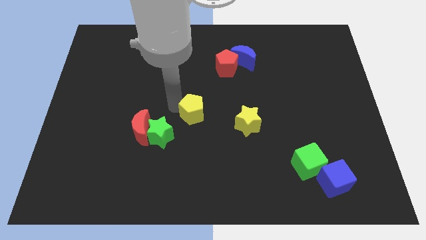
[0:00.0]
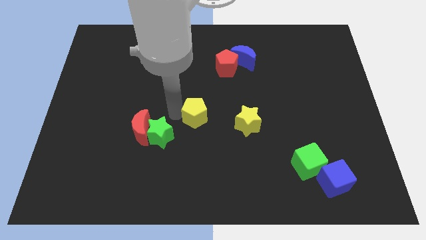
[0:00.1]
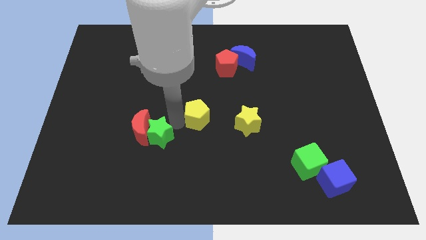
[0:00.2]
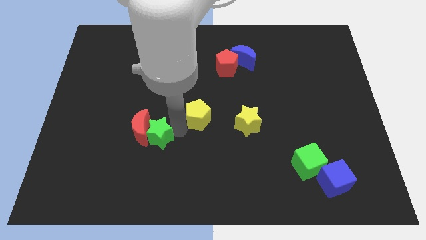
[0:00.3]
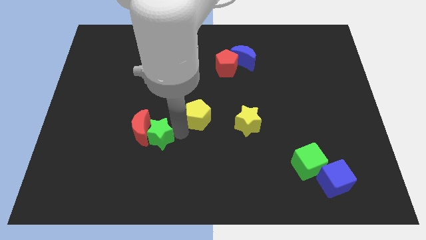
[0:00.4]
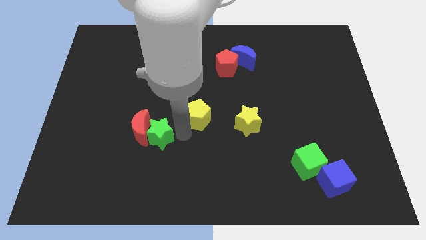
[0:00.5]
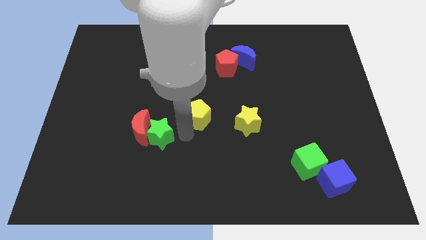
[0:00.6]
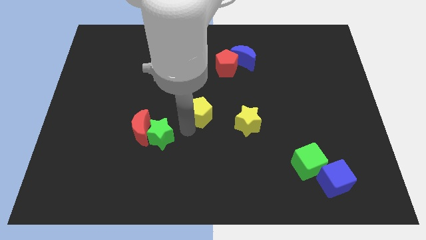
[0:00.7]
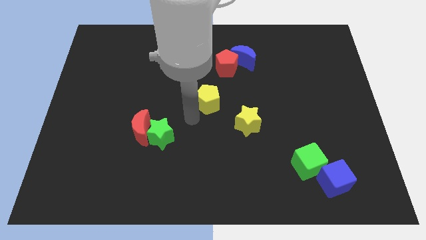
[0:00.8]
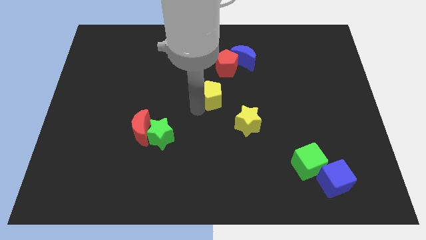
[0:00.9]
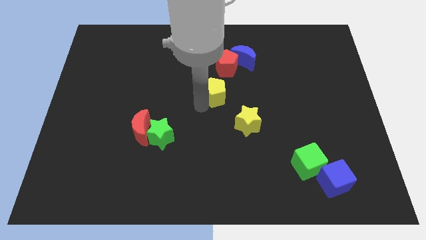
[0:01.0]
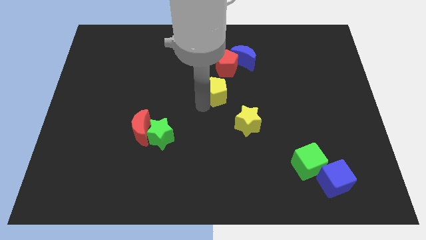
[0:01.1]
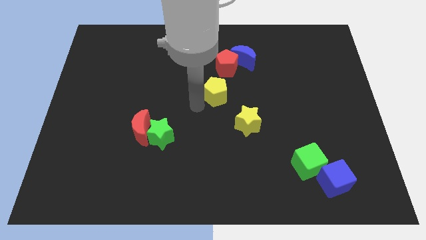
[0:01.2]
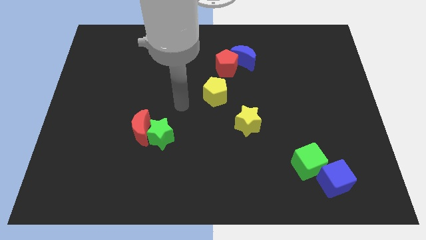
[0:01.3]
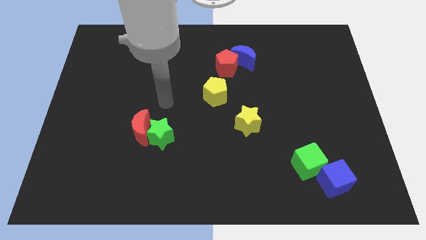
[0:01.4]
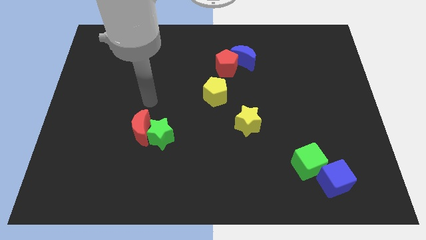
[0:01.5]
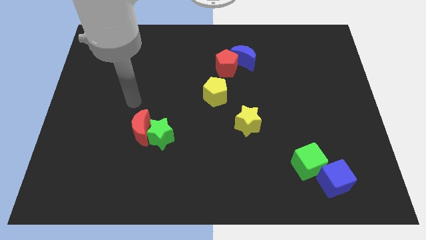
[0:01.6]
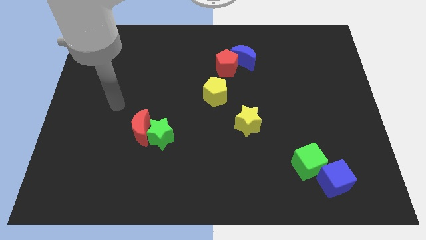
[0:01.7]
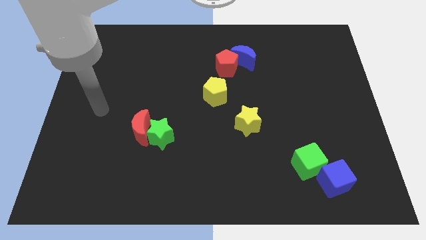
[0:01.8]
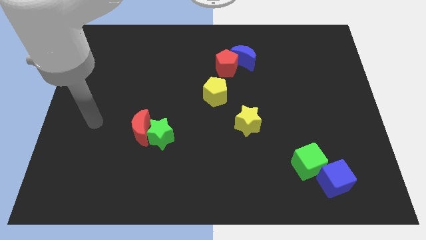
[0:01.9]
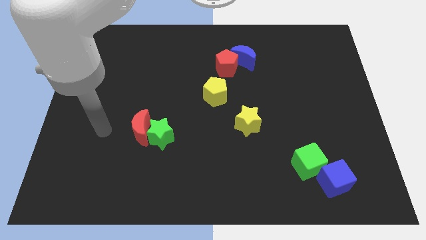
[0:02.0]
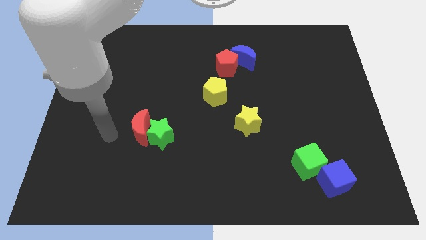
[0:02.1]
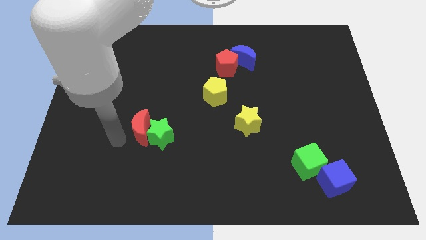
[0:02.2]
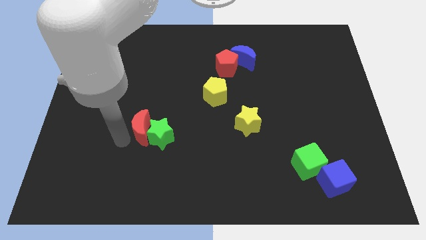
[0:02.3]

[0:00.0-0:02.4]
place the yellow pentagon diagonally to yellow star

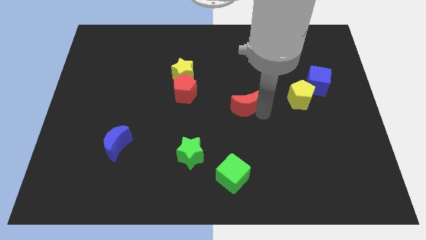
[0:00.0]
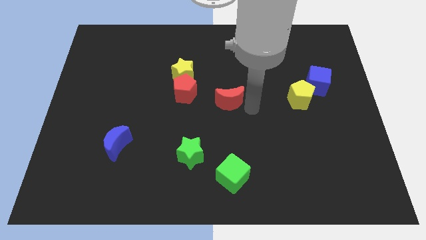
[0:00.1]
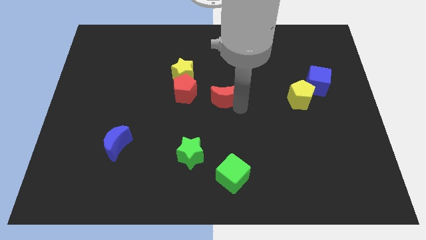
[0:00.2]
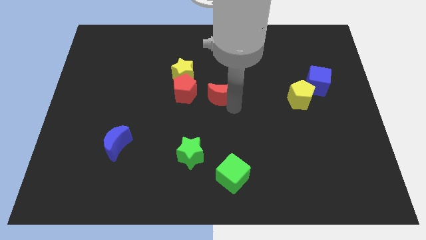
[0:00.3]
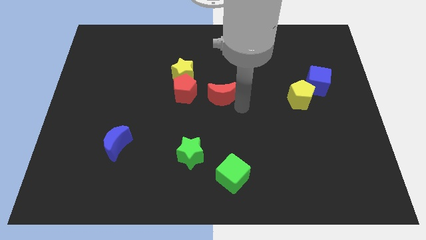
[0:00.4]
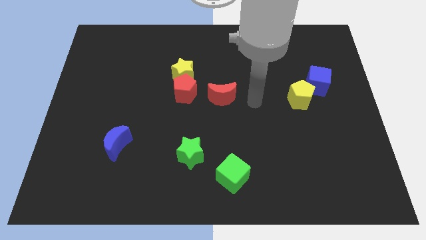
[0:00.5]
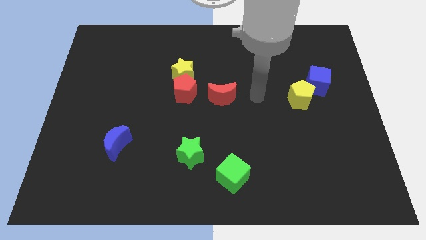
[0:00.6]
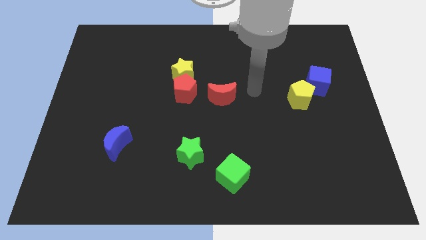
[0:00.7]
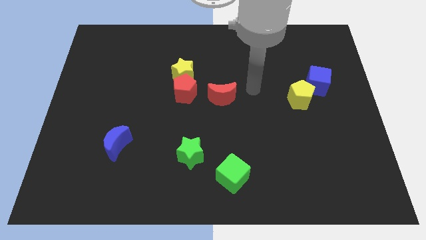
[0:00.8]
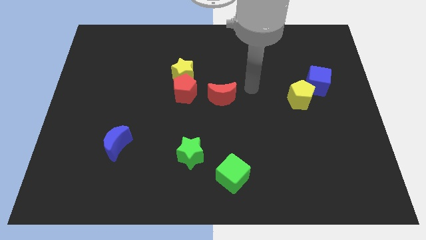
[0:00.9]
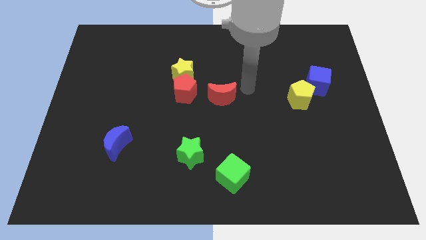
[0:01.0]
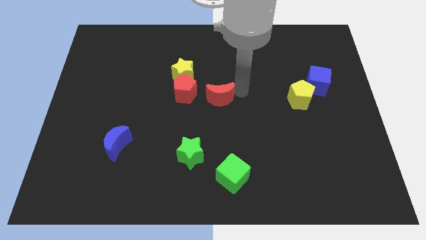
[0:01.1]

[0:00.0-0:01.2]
place red moon at the center

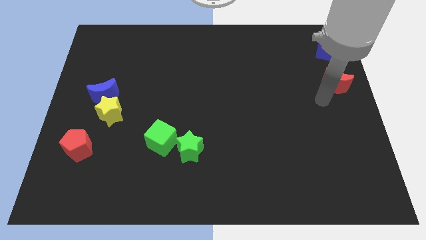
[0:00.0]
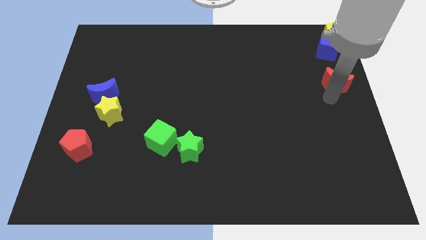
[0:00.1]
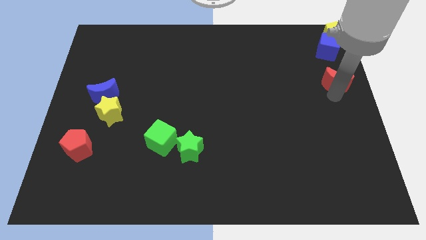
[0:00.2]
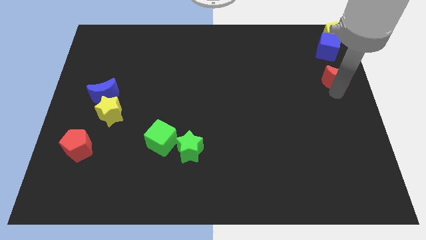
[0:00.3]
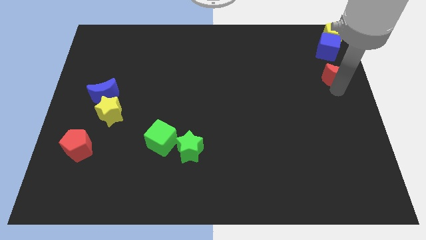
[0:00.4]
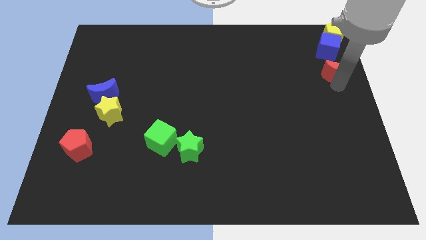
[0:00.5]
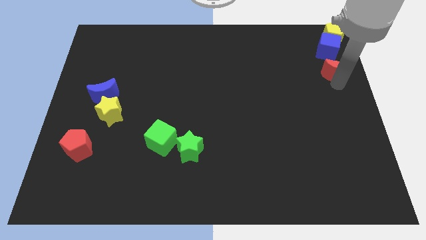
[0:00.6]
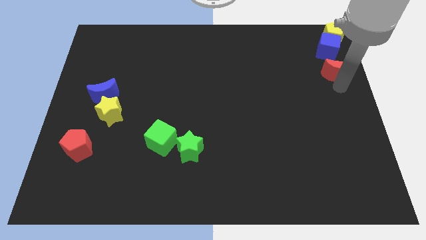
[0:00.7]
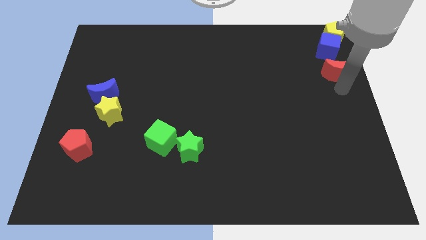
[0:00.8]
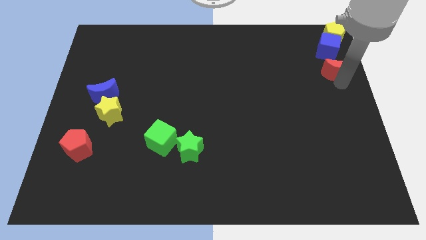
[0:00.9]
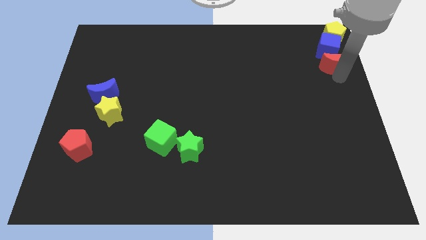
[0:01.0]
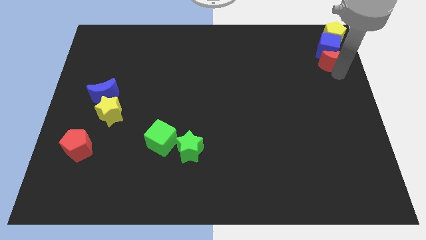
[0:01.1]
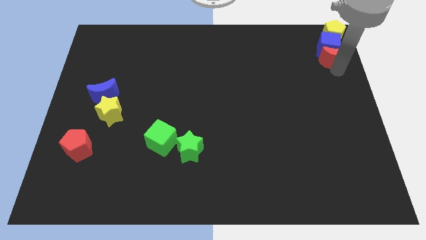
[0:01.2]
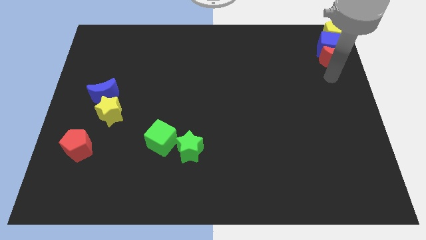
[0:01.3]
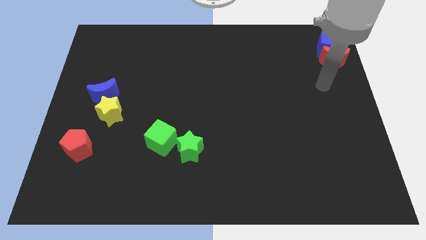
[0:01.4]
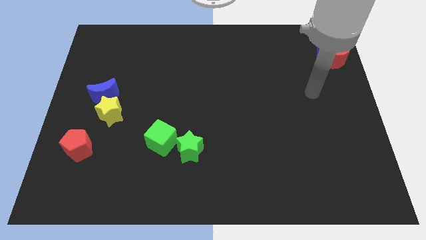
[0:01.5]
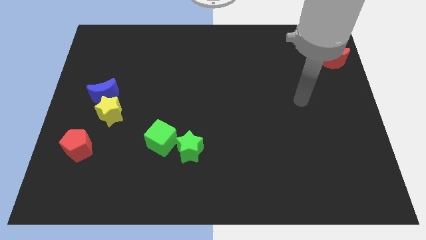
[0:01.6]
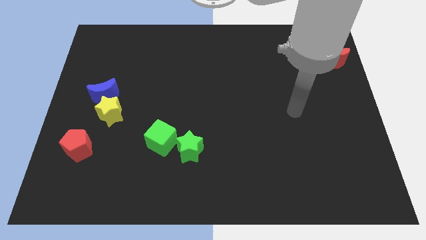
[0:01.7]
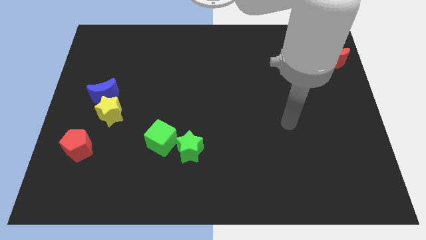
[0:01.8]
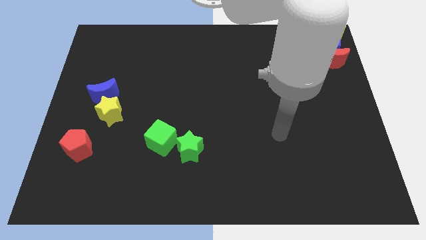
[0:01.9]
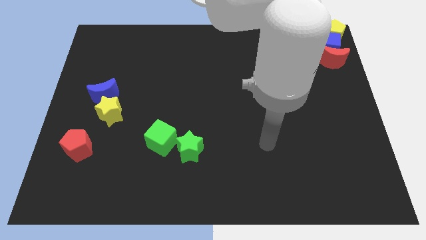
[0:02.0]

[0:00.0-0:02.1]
slide red moon into blue cube

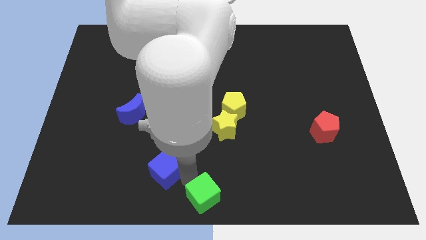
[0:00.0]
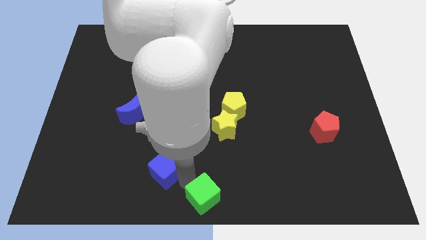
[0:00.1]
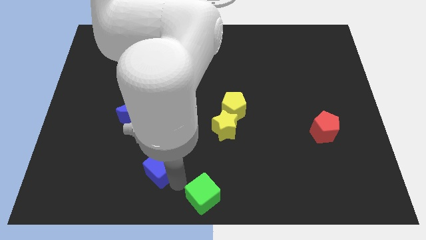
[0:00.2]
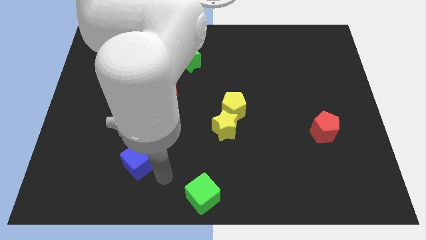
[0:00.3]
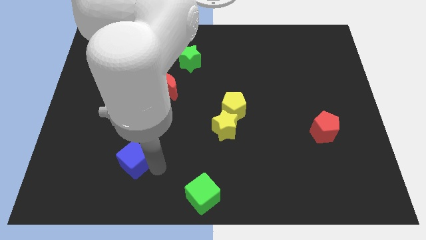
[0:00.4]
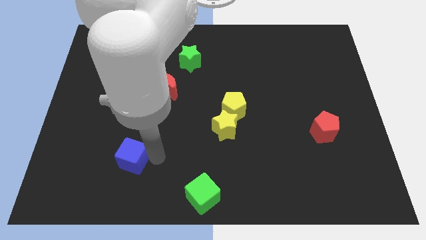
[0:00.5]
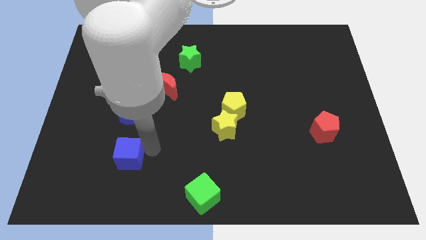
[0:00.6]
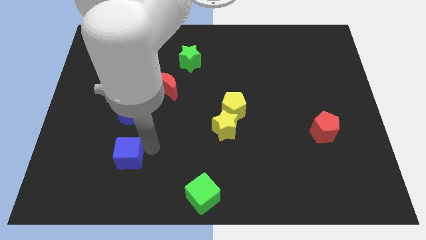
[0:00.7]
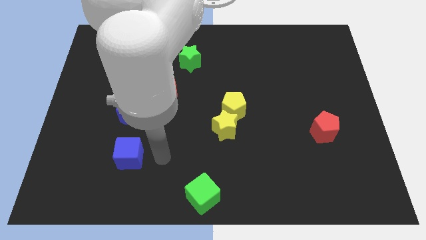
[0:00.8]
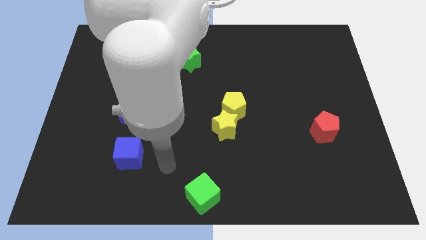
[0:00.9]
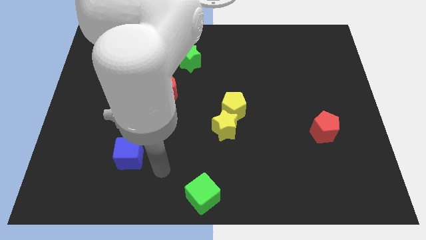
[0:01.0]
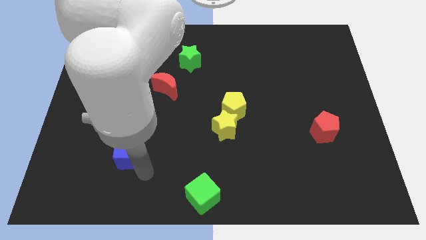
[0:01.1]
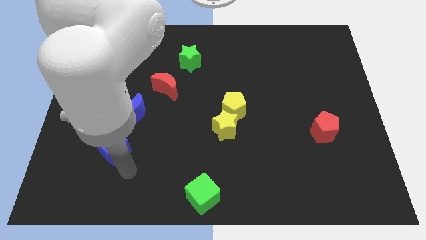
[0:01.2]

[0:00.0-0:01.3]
place the blue cube below the blue crescent

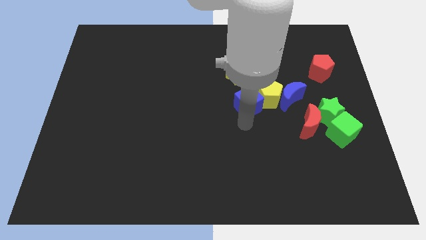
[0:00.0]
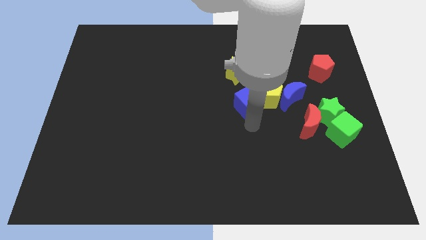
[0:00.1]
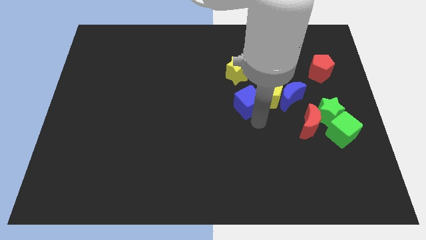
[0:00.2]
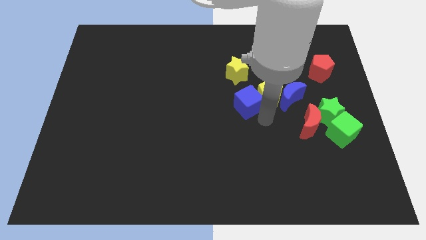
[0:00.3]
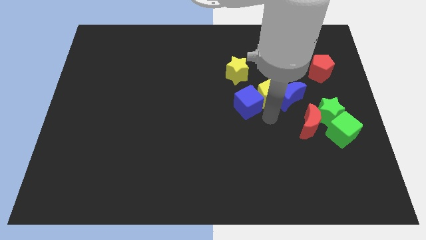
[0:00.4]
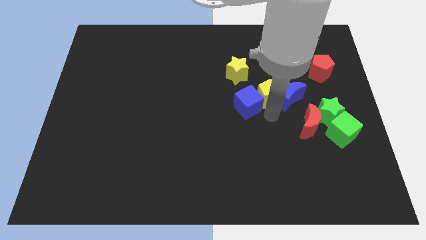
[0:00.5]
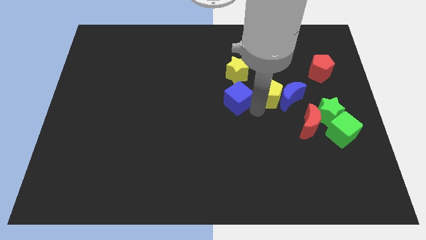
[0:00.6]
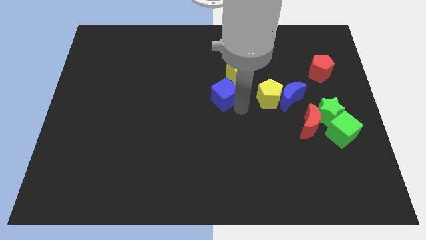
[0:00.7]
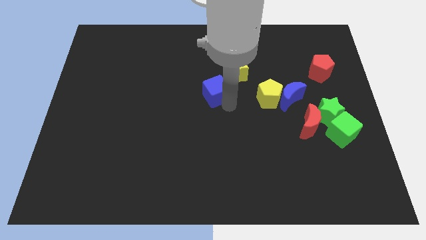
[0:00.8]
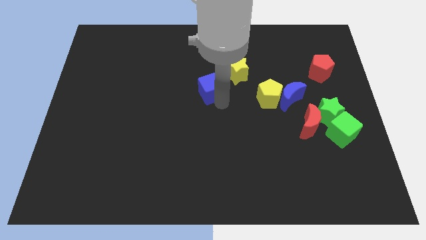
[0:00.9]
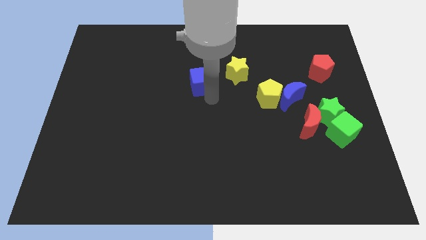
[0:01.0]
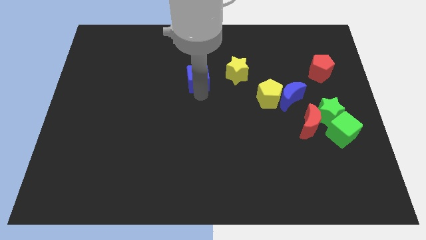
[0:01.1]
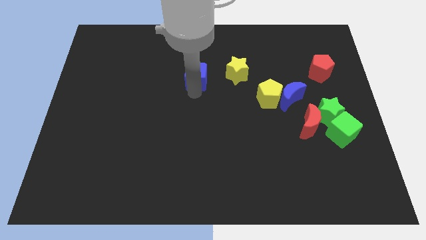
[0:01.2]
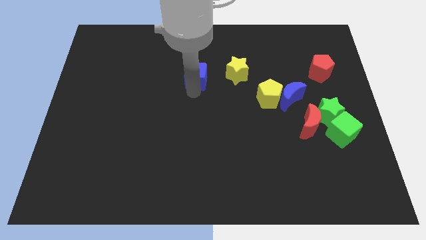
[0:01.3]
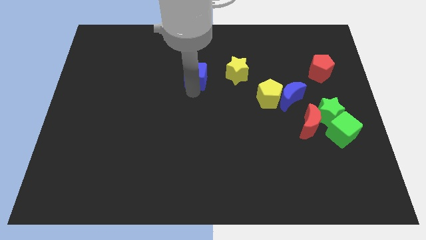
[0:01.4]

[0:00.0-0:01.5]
move the blue cube to the left of yellow star

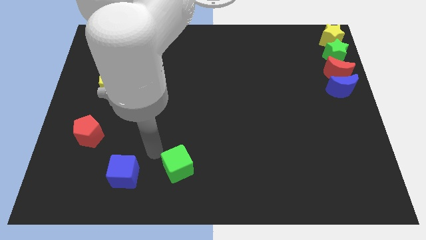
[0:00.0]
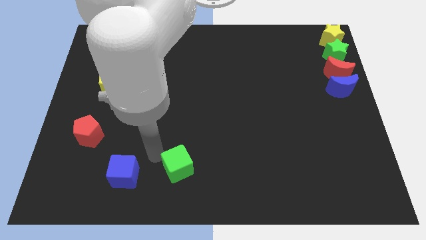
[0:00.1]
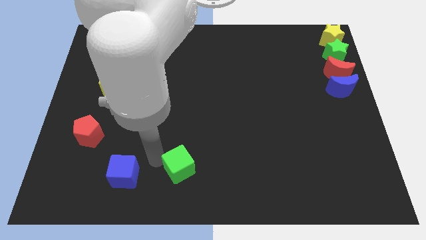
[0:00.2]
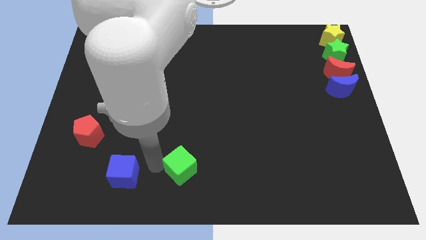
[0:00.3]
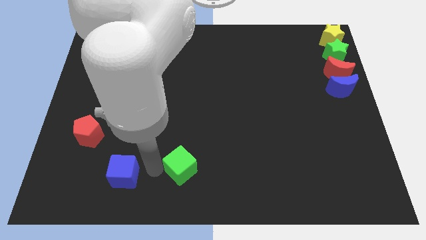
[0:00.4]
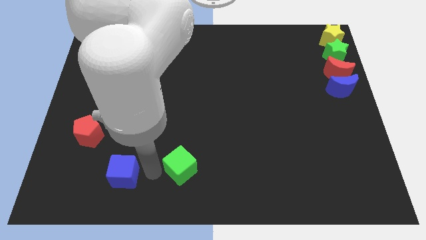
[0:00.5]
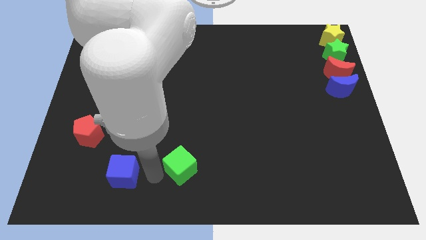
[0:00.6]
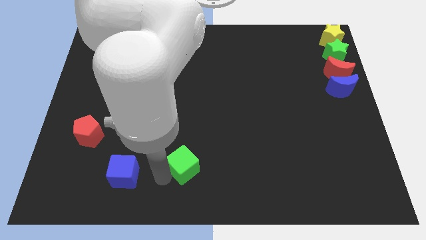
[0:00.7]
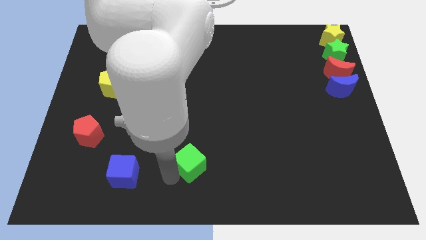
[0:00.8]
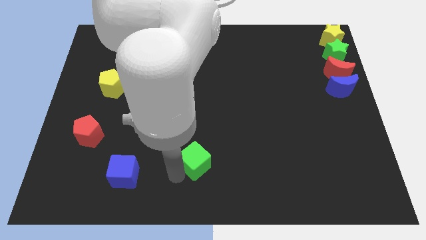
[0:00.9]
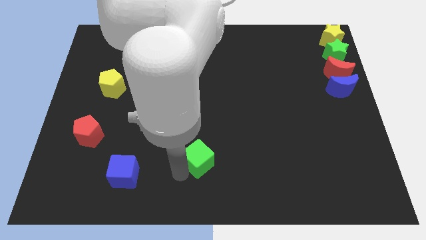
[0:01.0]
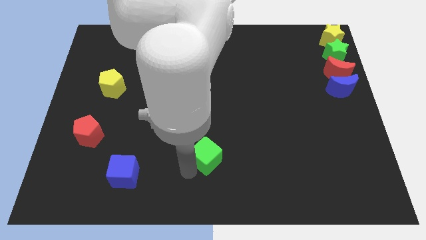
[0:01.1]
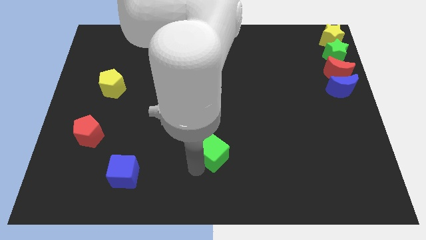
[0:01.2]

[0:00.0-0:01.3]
move green cube slightly to right
